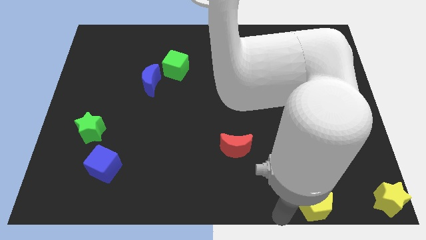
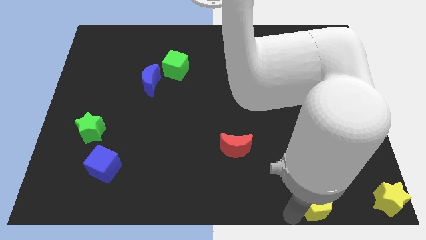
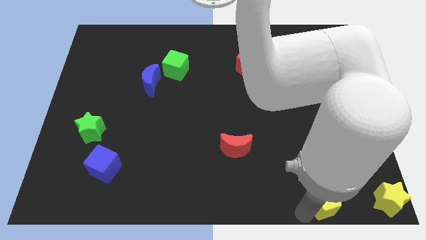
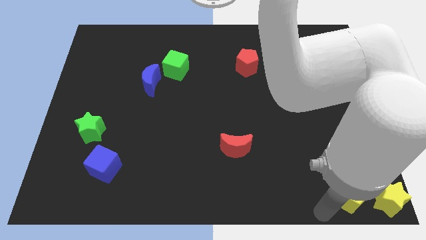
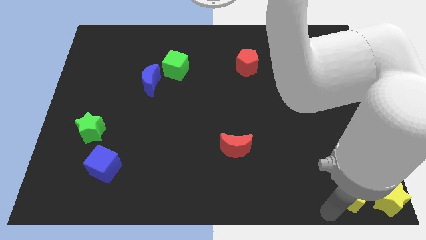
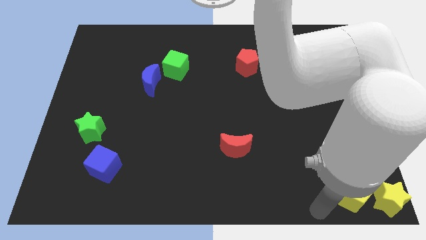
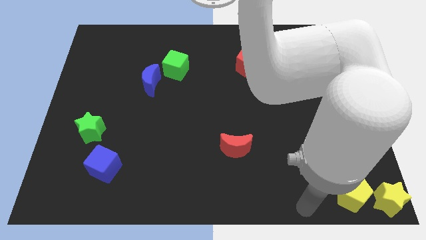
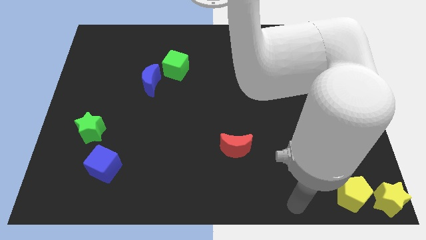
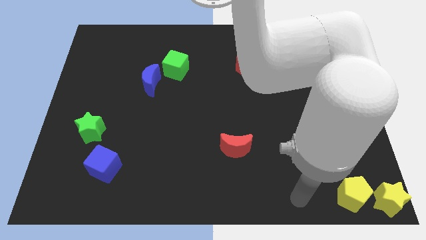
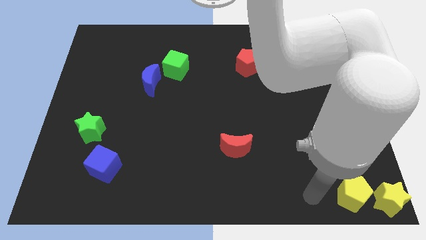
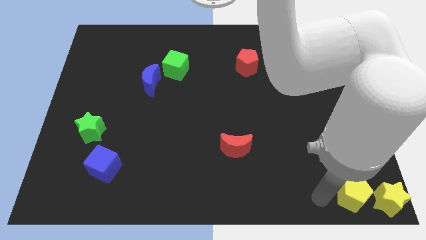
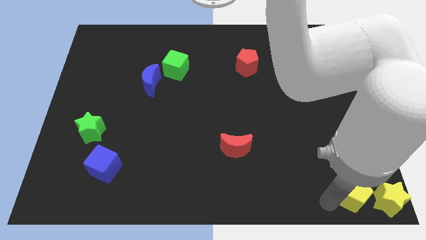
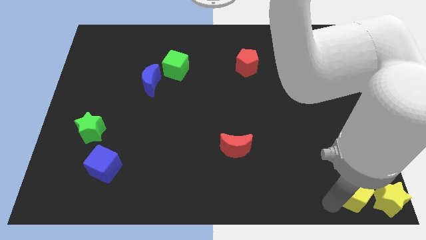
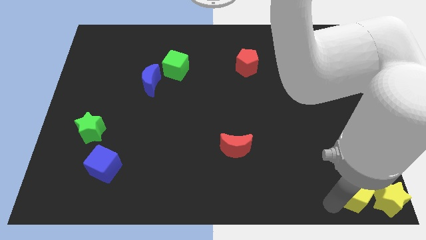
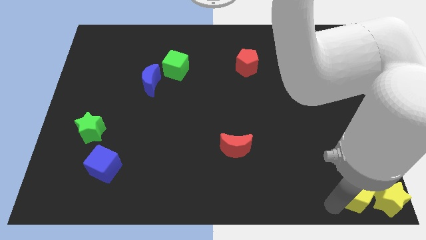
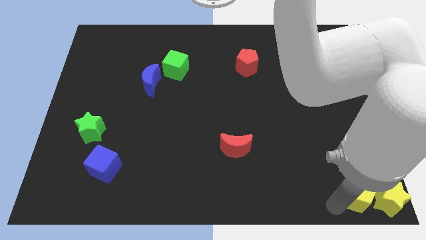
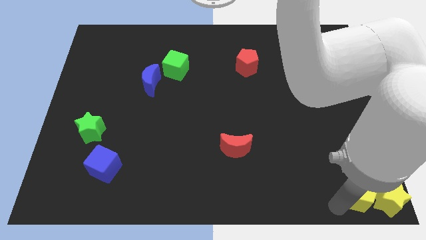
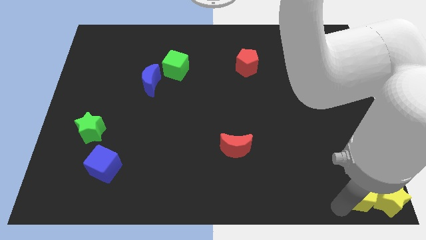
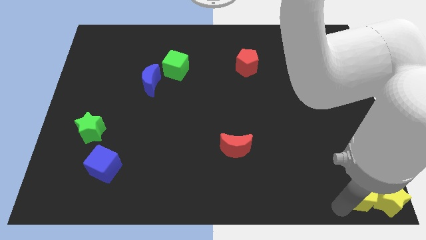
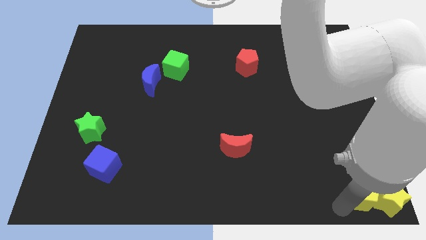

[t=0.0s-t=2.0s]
place the yellow pentagon near the yellow star

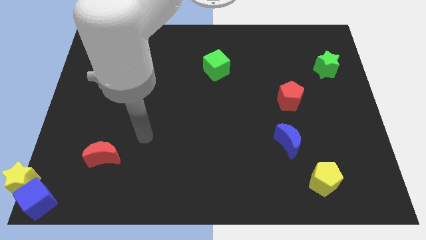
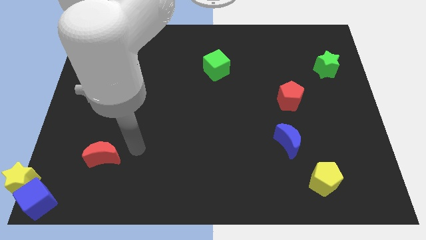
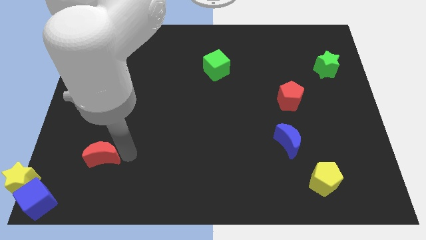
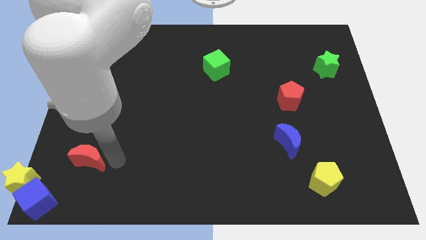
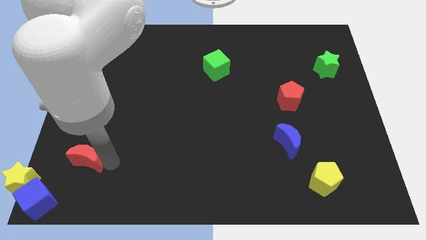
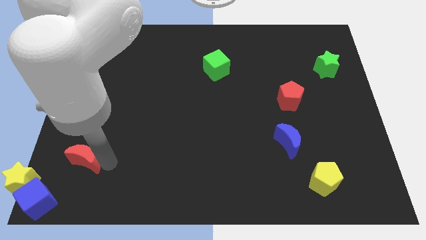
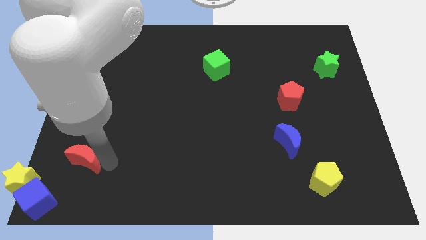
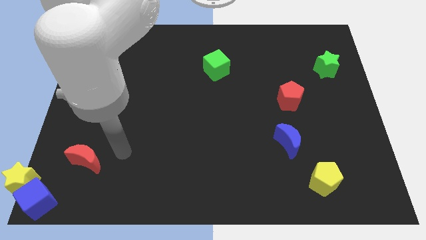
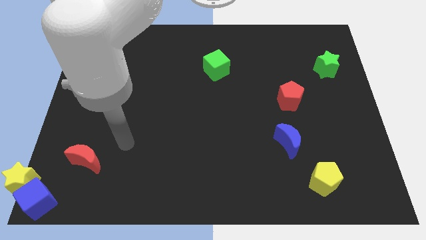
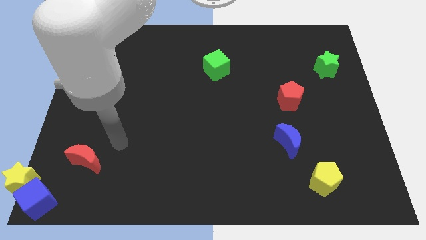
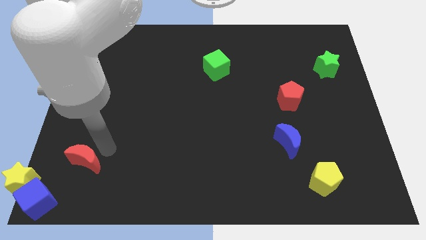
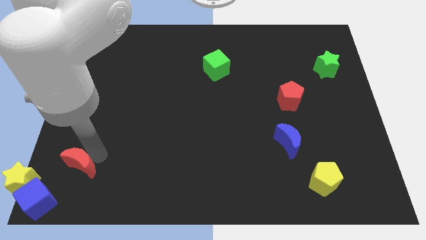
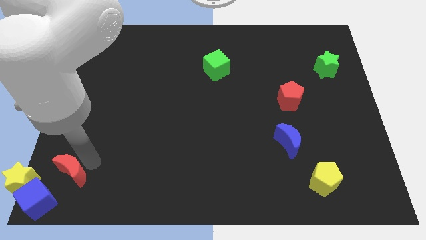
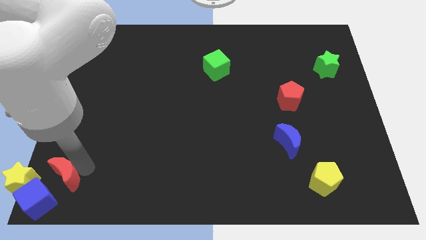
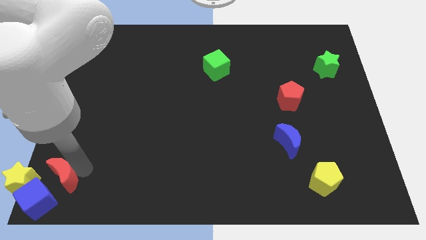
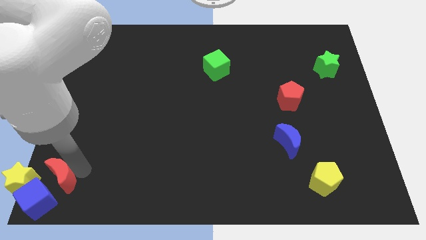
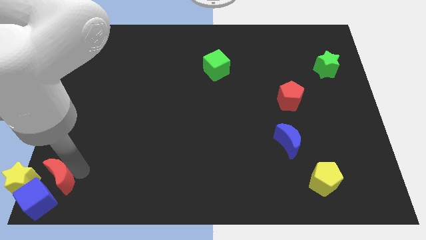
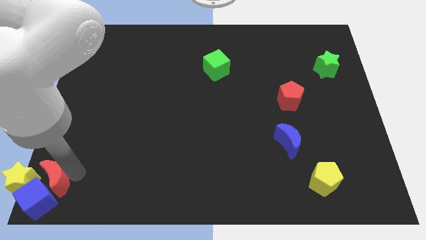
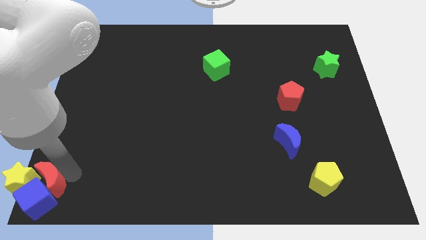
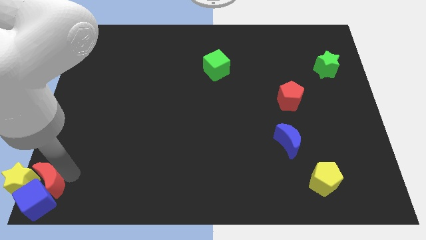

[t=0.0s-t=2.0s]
move the red moon near to the yellow star and blue cube

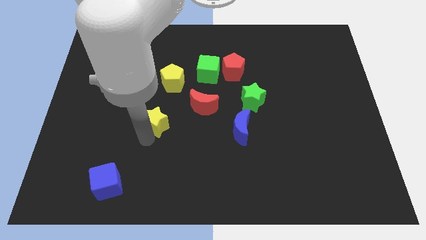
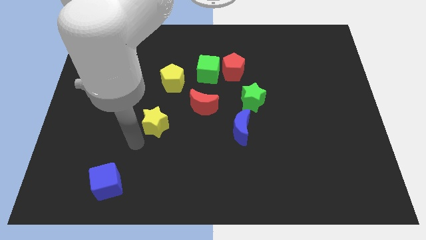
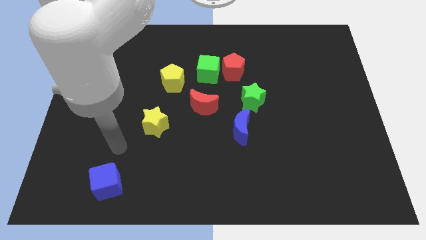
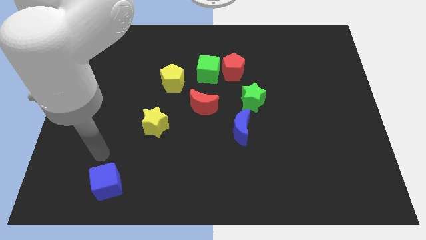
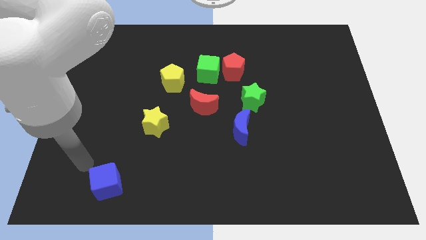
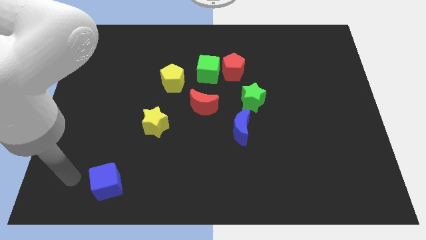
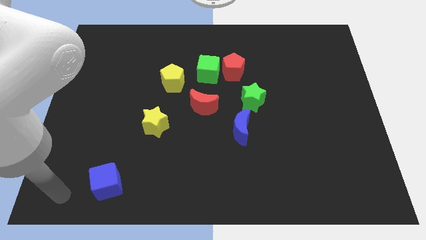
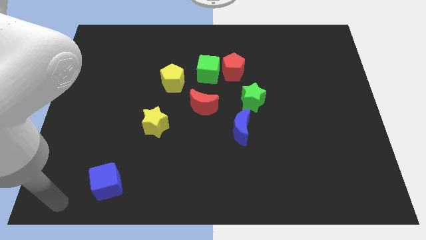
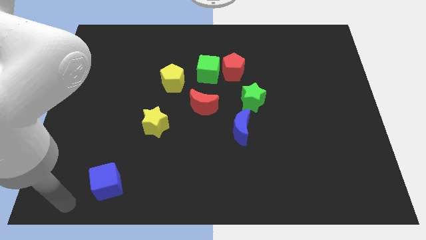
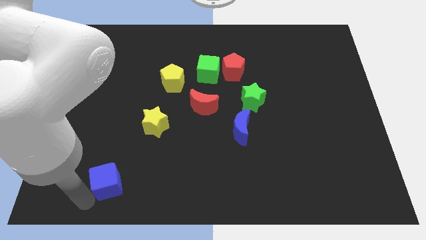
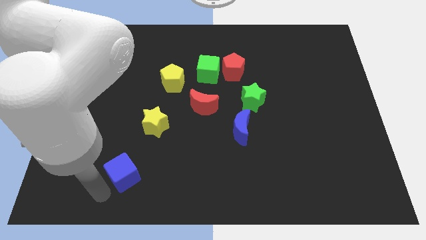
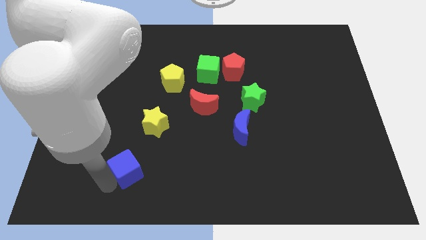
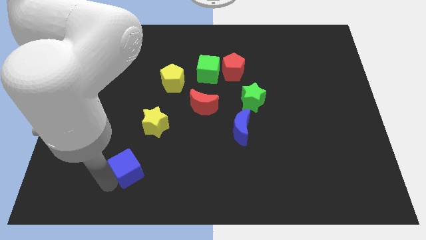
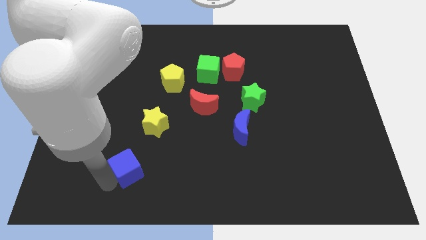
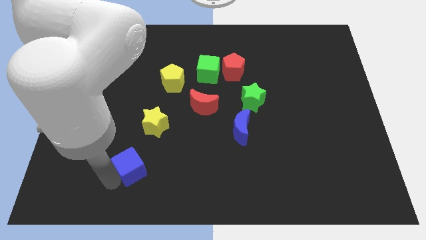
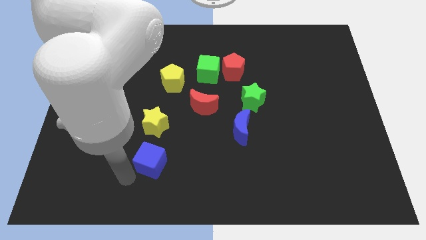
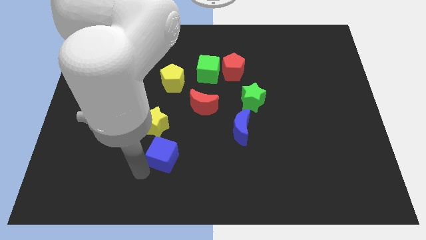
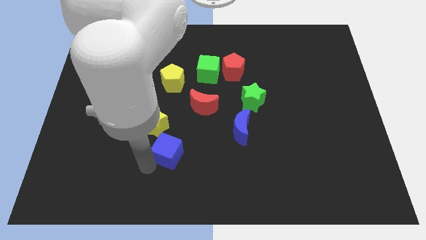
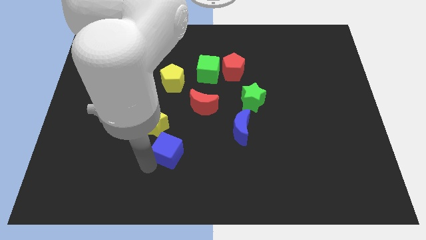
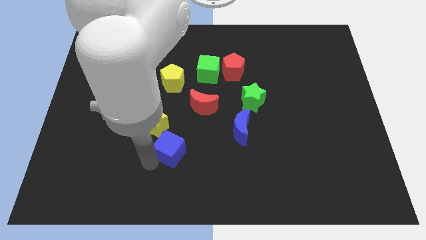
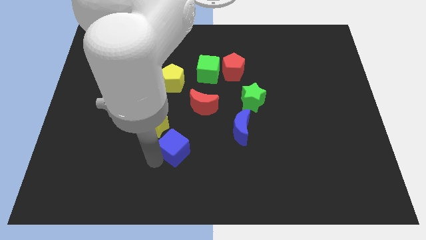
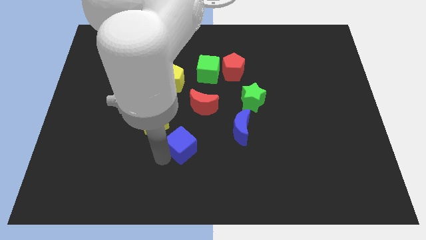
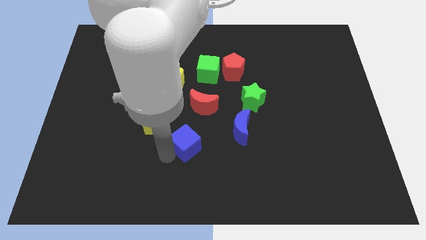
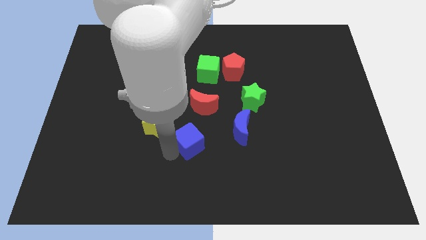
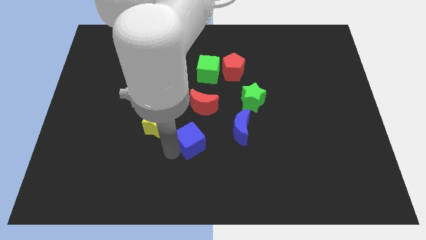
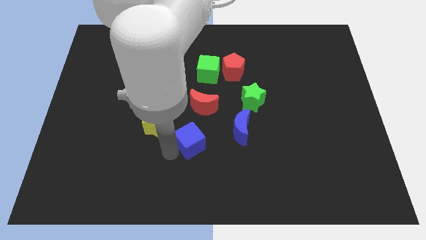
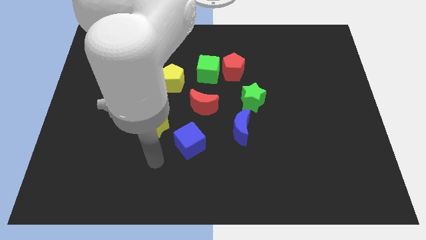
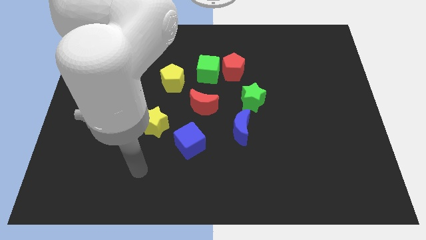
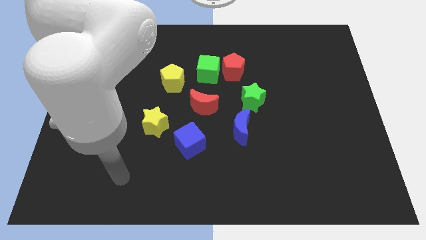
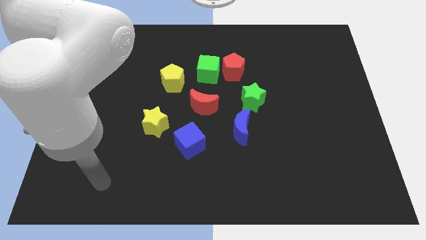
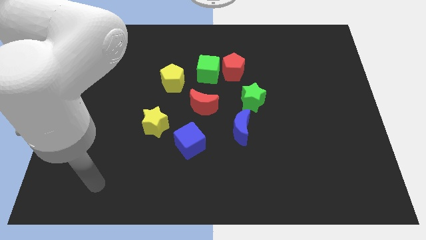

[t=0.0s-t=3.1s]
put the blue cube at the right side of the yellow star

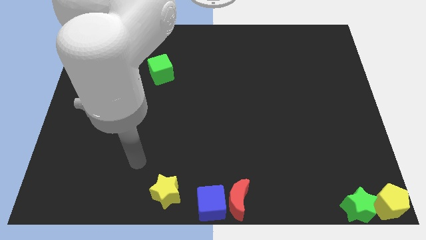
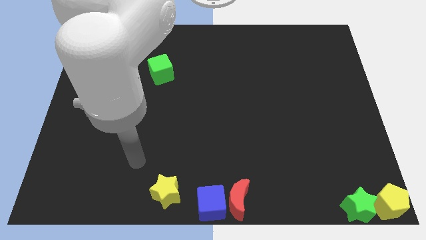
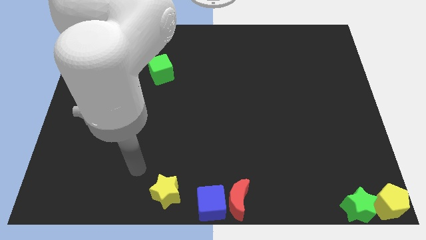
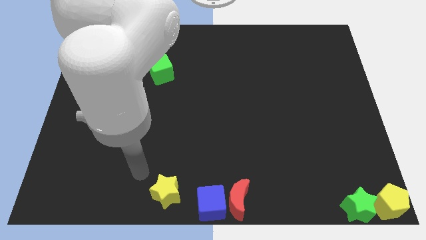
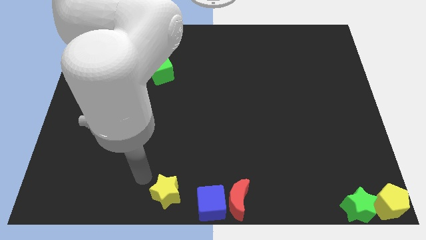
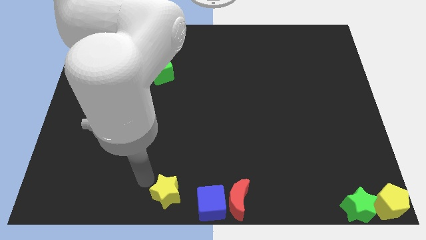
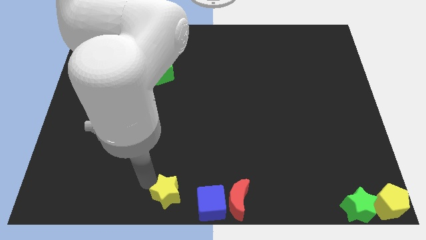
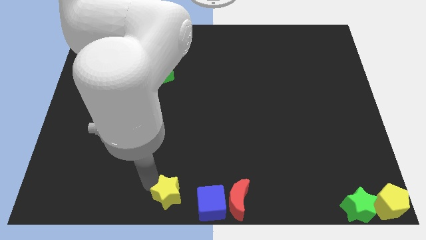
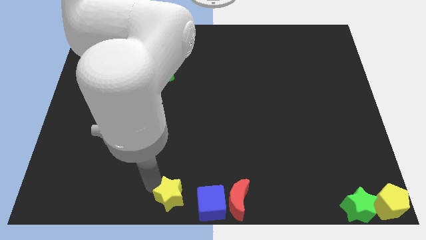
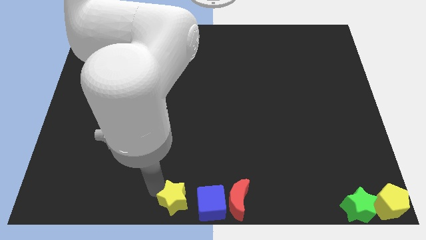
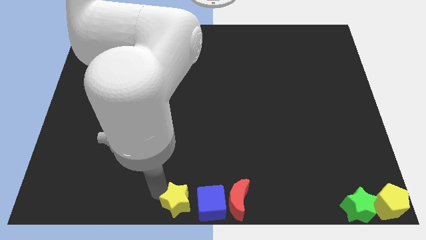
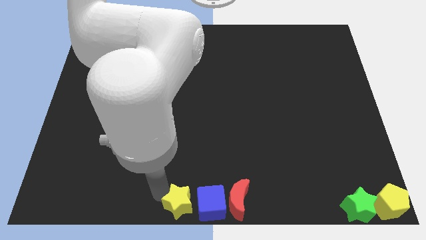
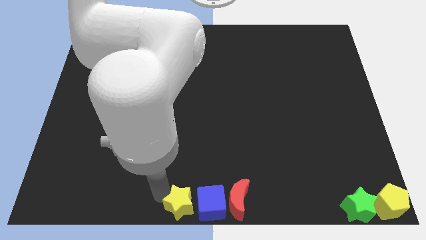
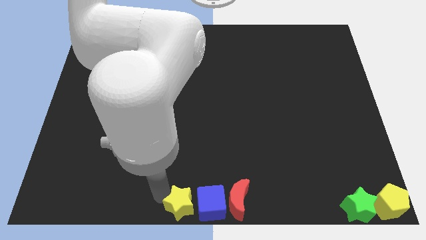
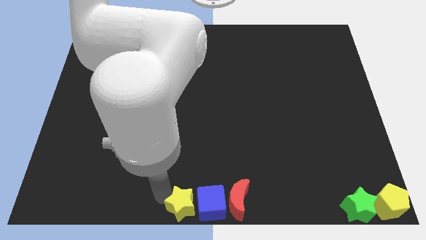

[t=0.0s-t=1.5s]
move yellow star to the left of blue cube

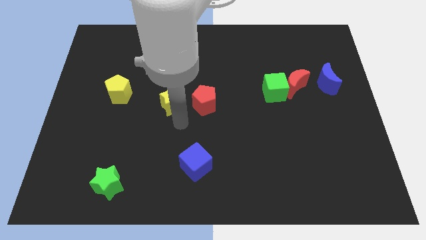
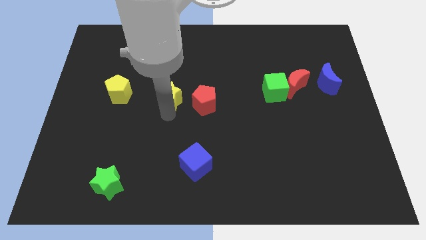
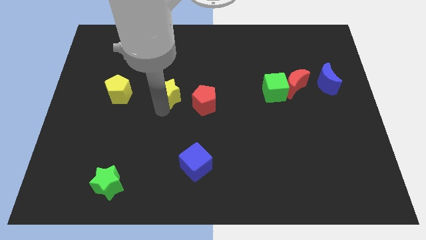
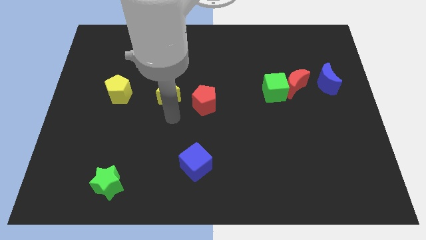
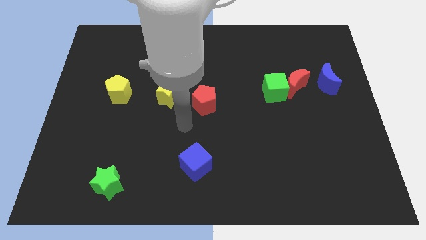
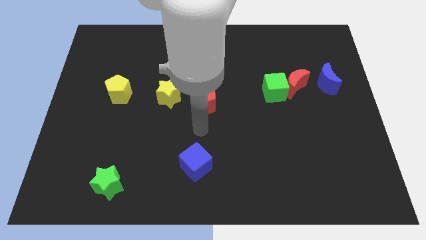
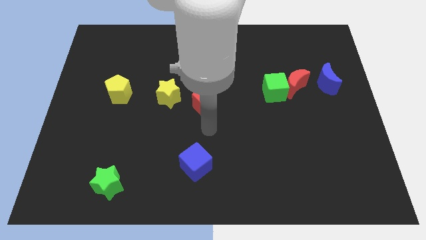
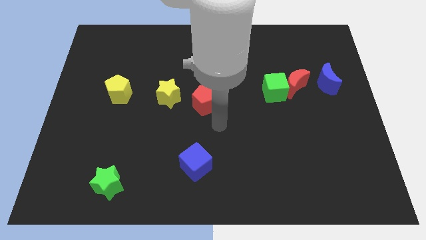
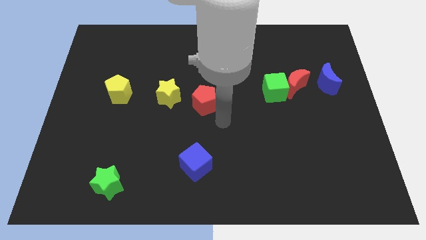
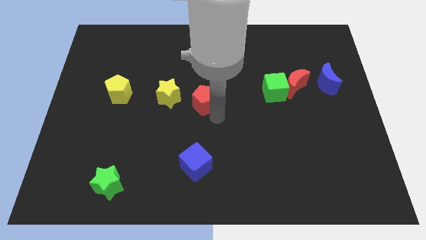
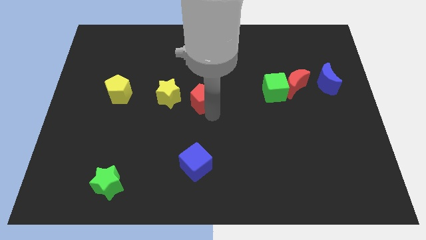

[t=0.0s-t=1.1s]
move your arm away from the yellow star
